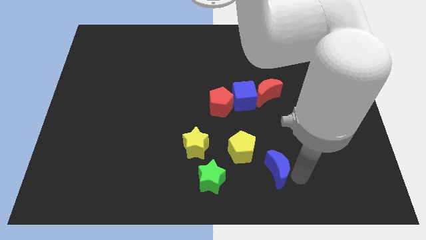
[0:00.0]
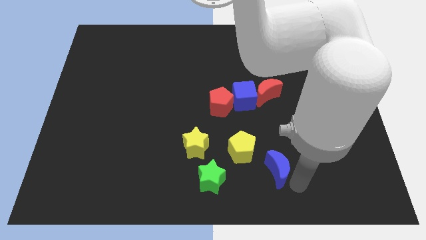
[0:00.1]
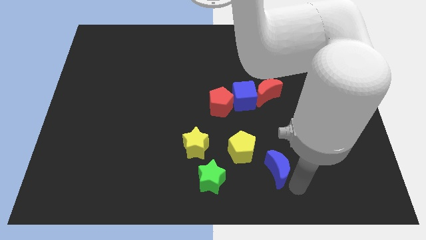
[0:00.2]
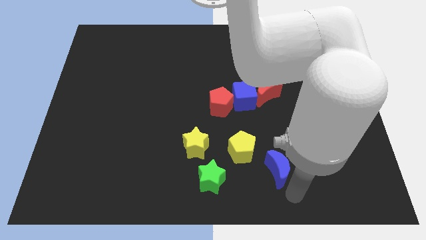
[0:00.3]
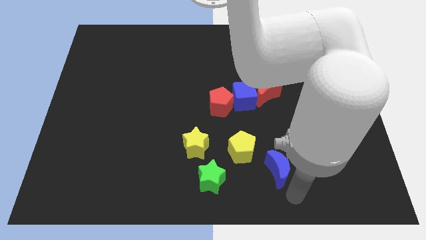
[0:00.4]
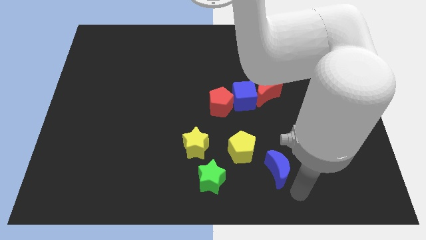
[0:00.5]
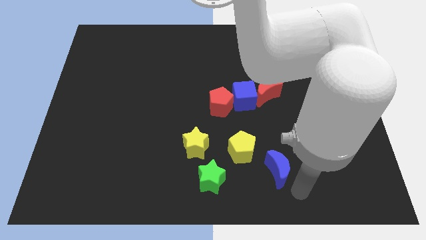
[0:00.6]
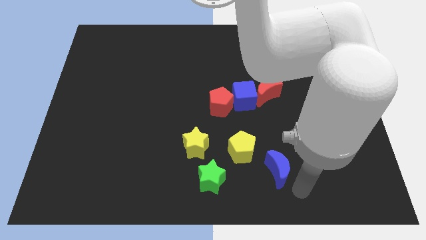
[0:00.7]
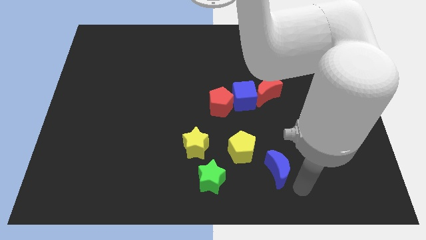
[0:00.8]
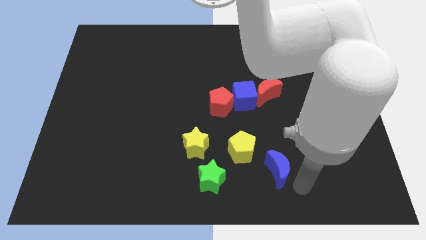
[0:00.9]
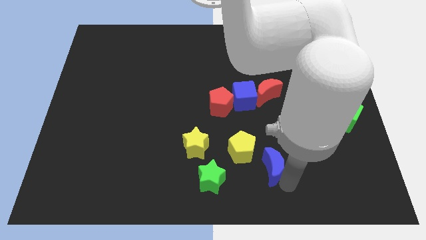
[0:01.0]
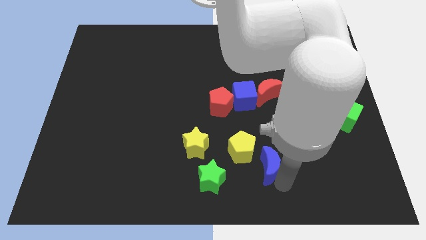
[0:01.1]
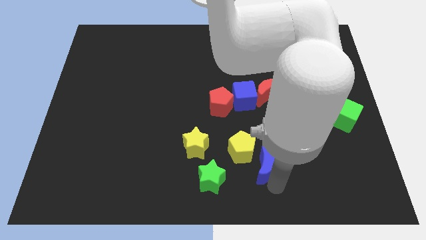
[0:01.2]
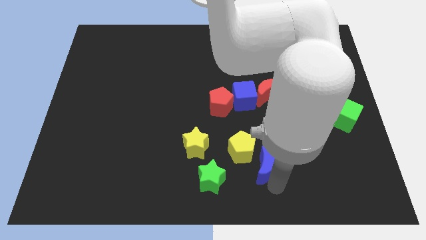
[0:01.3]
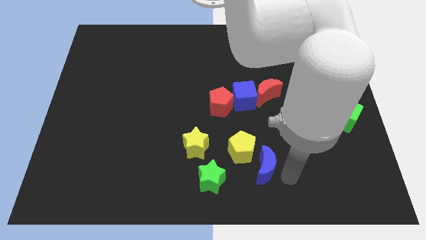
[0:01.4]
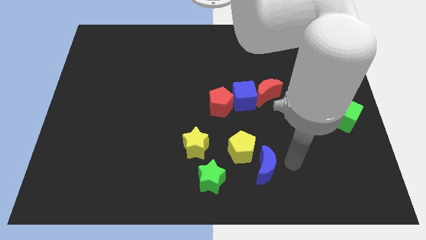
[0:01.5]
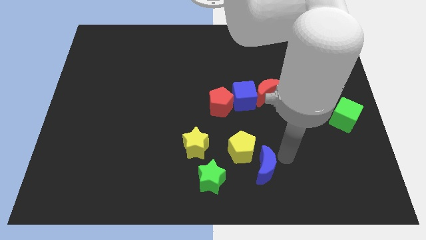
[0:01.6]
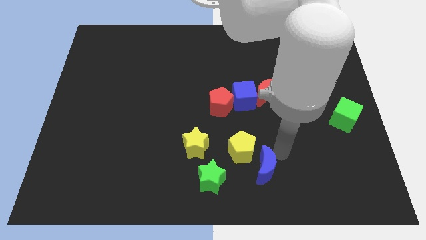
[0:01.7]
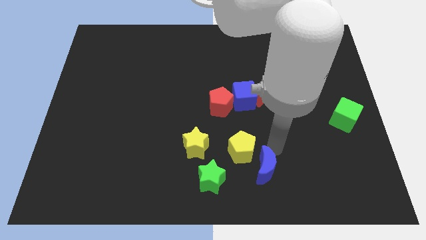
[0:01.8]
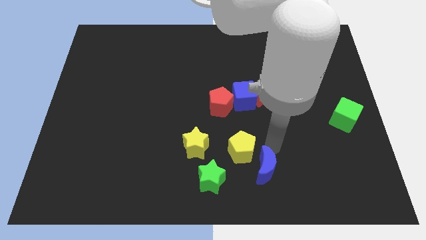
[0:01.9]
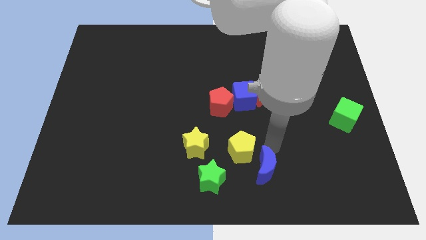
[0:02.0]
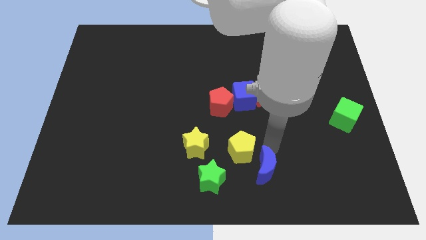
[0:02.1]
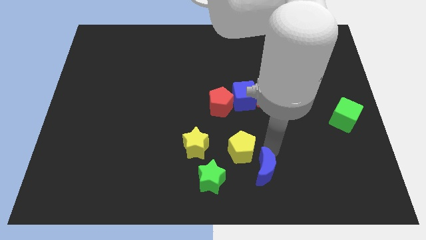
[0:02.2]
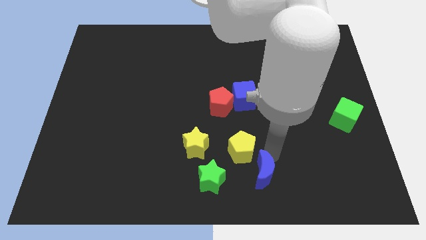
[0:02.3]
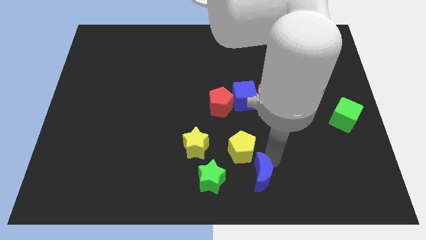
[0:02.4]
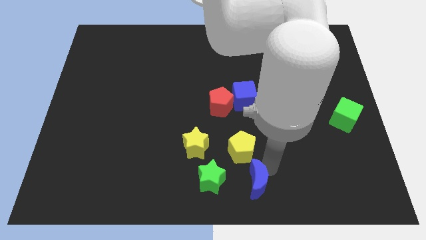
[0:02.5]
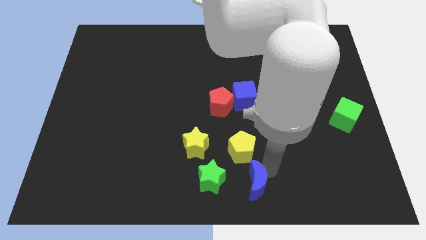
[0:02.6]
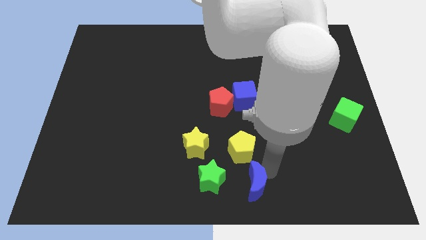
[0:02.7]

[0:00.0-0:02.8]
place the blue moon right to the green star

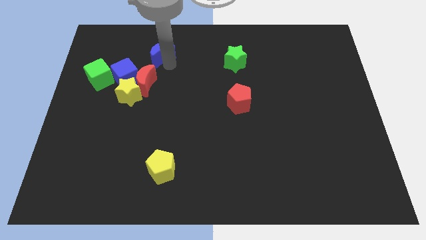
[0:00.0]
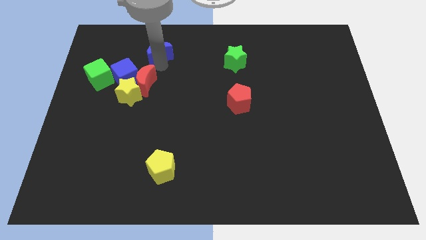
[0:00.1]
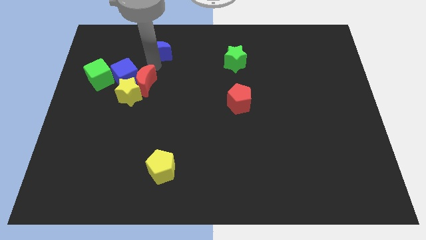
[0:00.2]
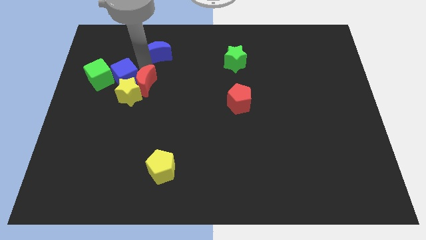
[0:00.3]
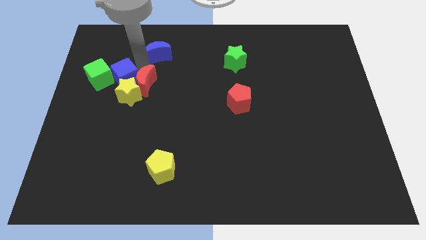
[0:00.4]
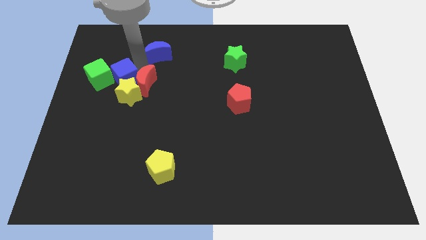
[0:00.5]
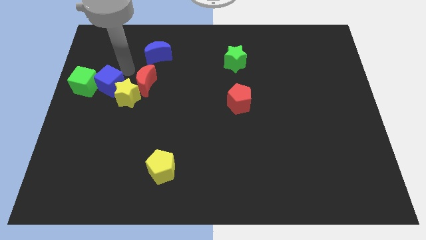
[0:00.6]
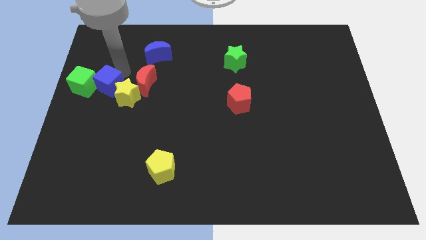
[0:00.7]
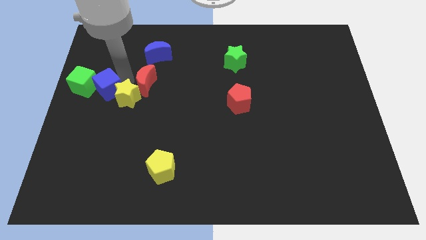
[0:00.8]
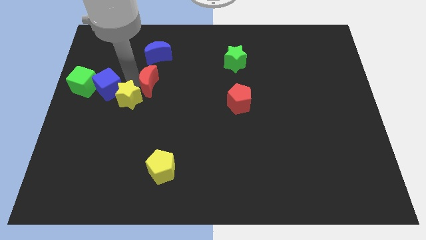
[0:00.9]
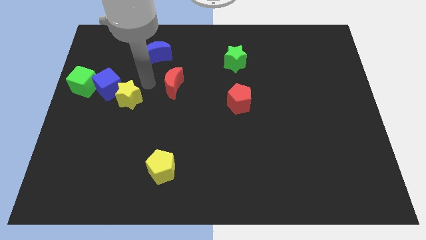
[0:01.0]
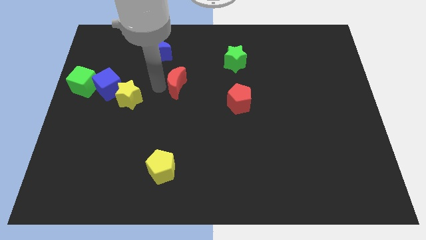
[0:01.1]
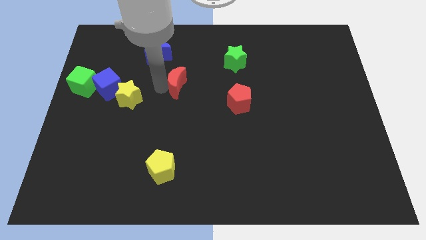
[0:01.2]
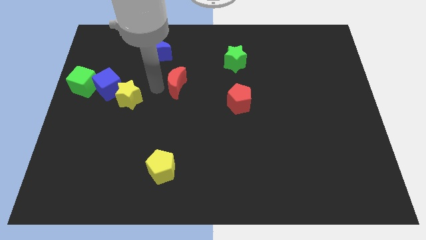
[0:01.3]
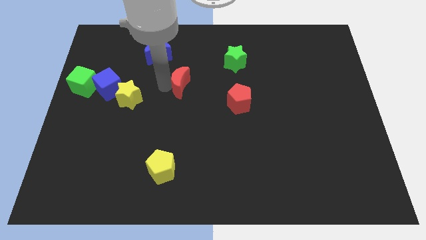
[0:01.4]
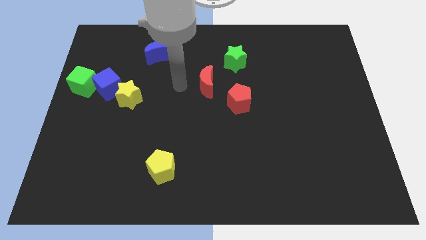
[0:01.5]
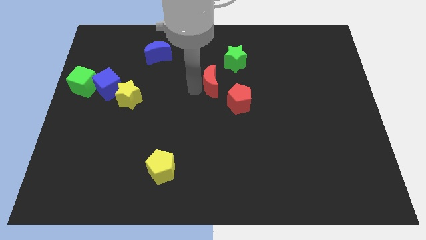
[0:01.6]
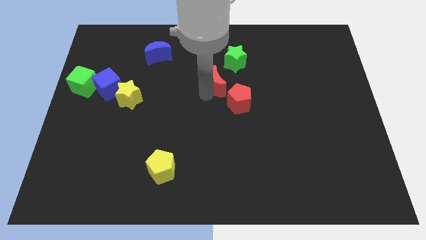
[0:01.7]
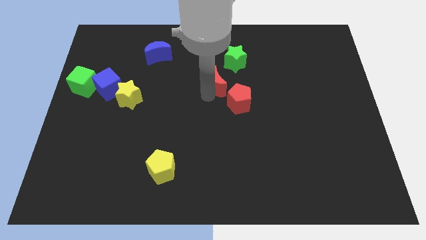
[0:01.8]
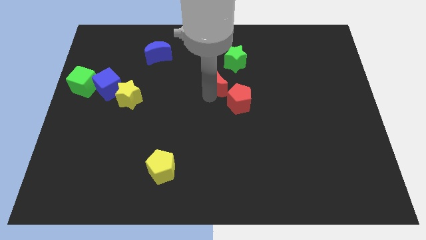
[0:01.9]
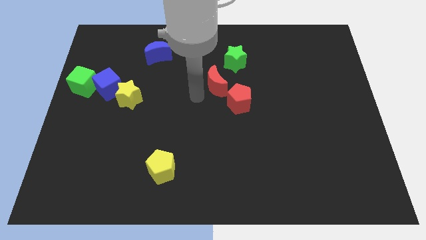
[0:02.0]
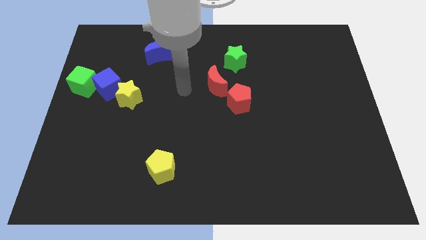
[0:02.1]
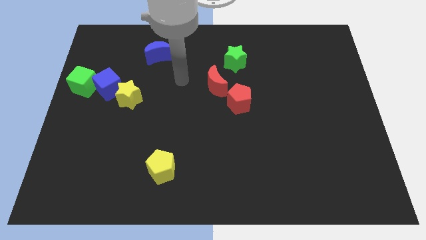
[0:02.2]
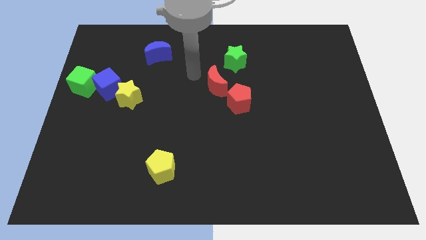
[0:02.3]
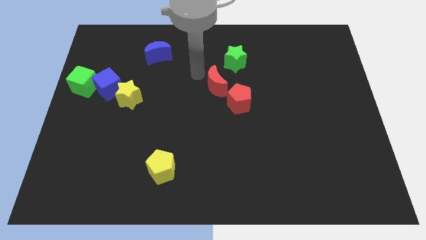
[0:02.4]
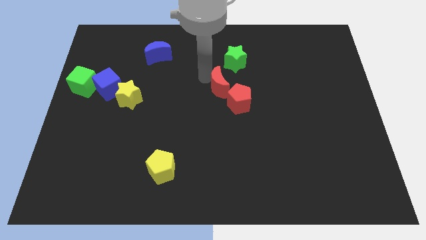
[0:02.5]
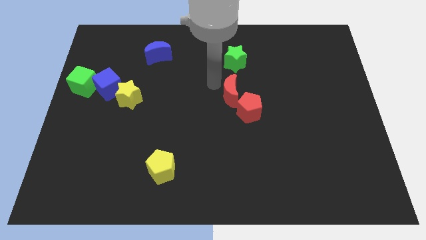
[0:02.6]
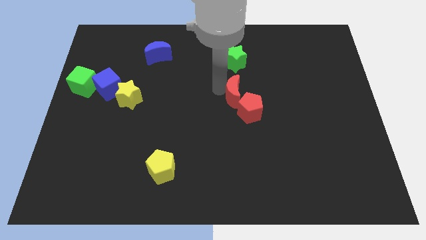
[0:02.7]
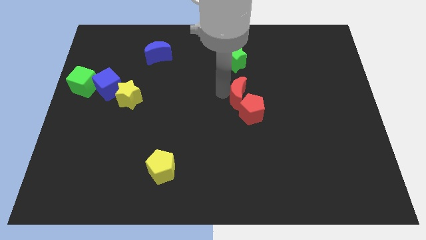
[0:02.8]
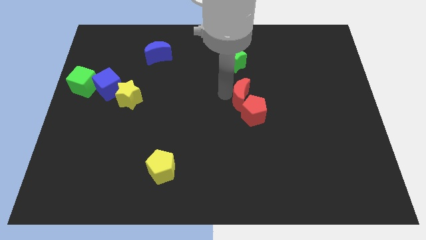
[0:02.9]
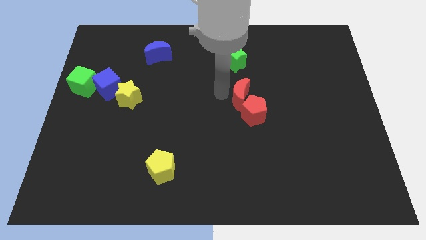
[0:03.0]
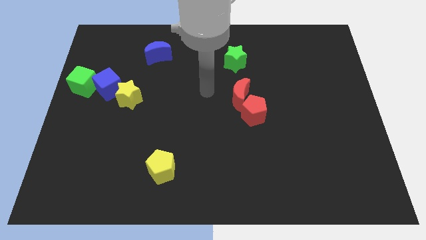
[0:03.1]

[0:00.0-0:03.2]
place the red moon below the green star

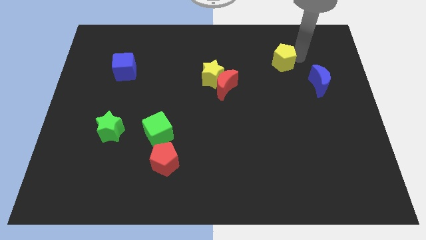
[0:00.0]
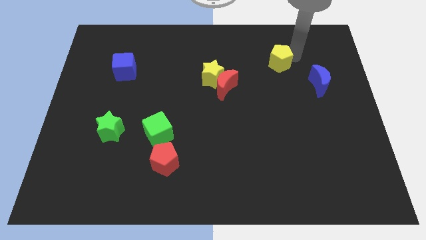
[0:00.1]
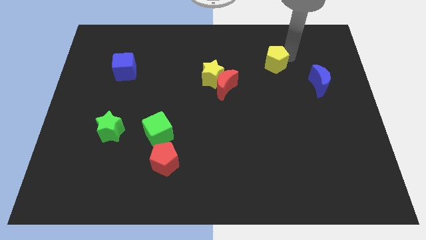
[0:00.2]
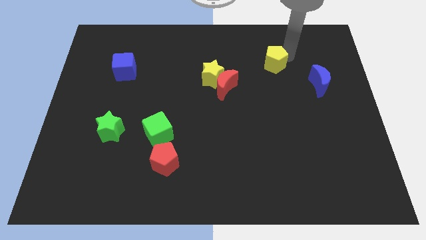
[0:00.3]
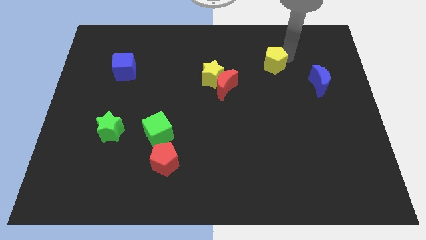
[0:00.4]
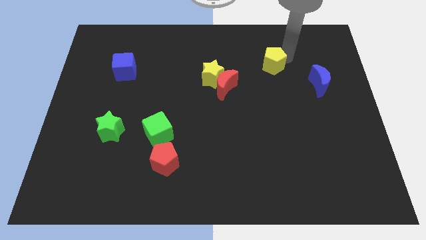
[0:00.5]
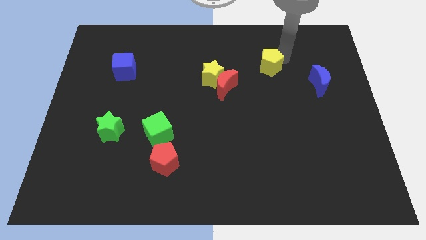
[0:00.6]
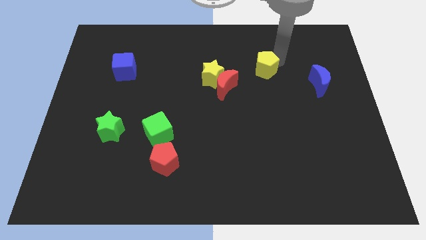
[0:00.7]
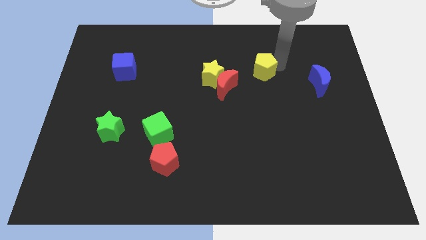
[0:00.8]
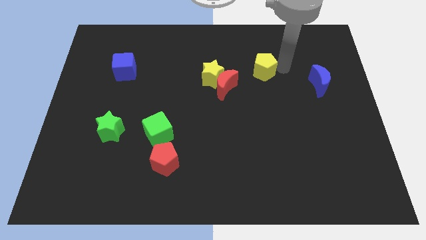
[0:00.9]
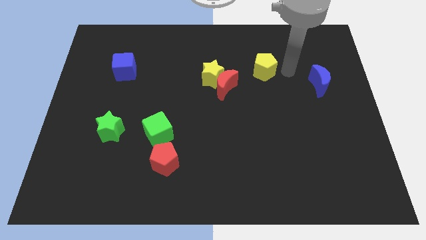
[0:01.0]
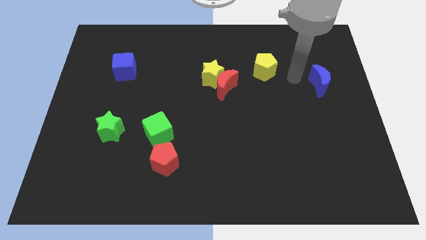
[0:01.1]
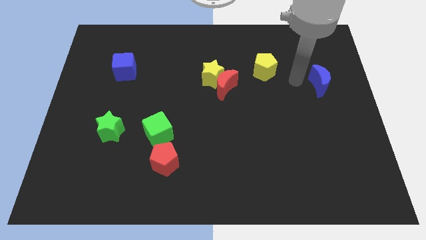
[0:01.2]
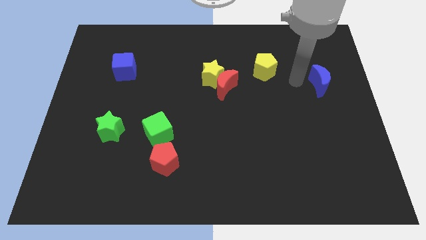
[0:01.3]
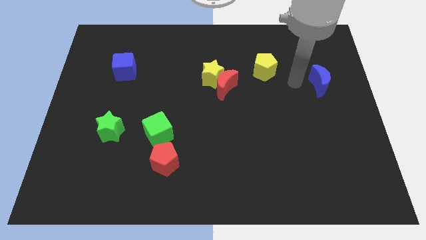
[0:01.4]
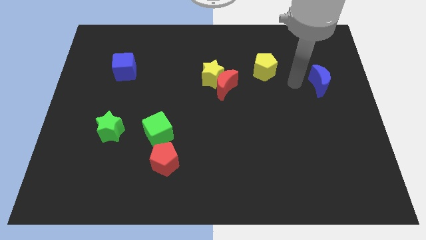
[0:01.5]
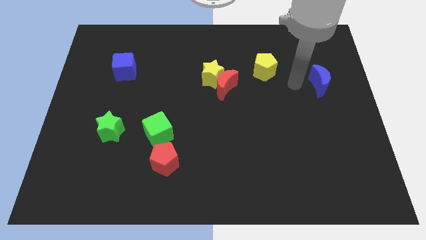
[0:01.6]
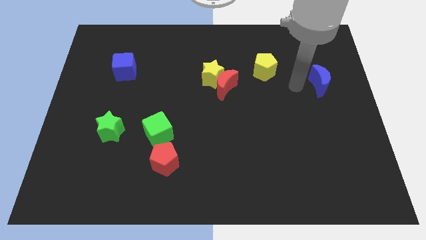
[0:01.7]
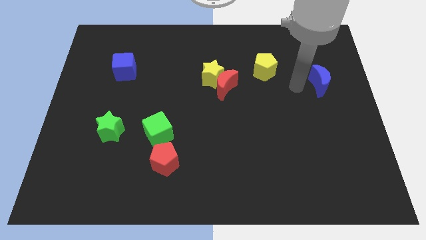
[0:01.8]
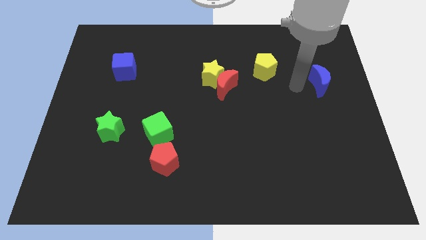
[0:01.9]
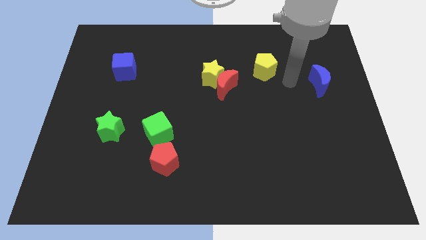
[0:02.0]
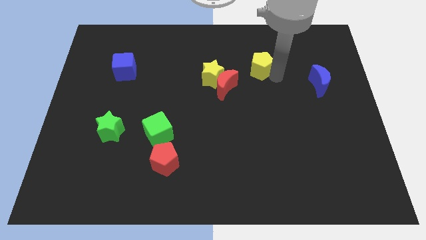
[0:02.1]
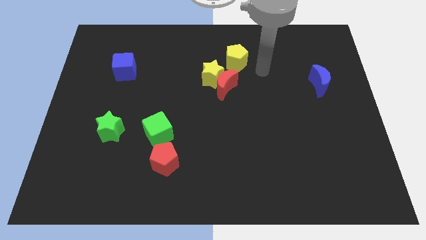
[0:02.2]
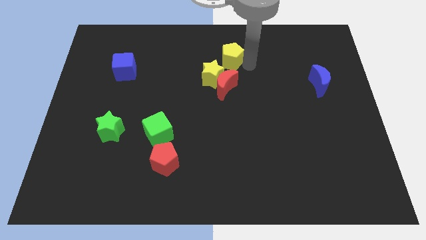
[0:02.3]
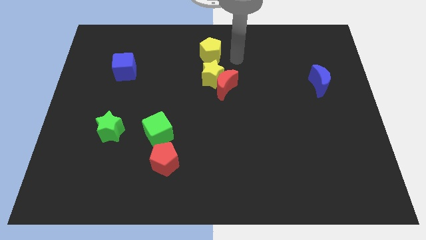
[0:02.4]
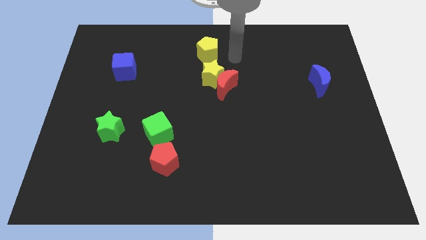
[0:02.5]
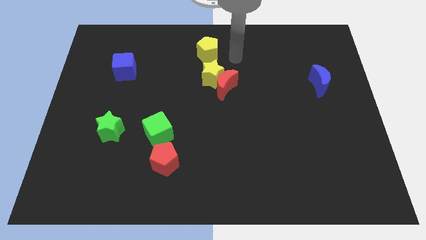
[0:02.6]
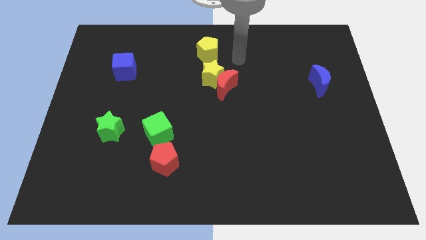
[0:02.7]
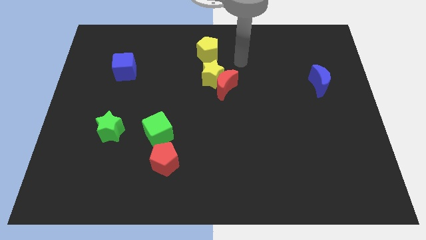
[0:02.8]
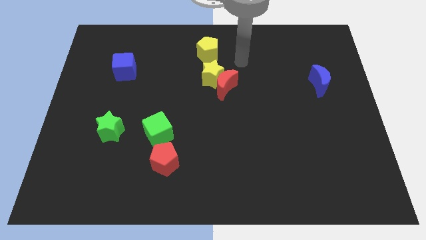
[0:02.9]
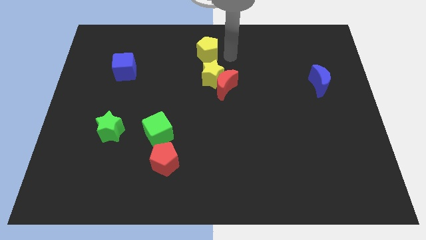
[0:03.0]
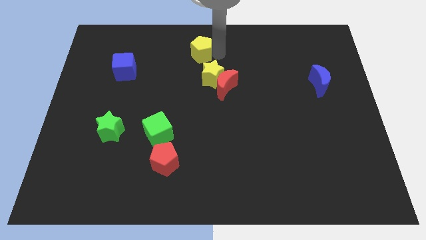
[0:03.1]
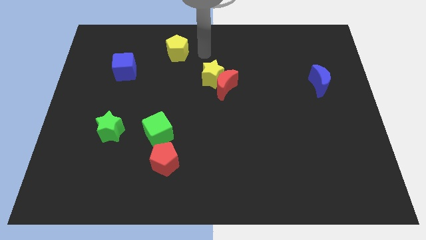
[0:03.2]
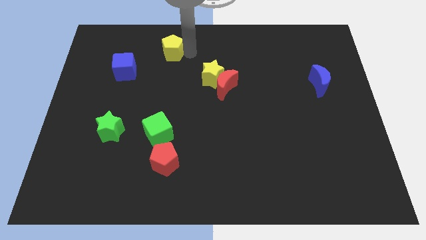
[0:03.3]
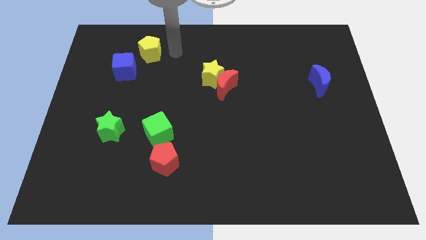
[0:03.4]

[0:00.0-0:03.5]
move the yellow pentagon to the top side of the yellow star
